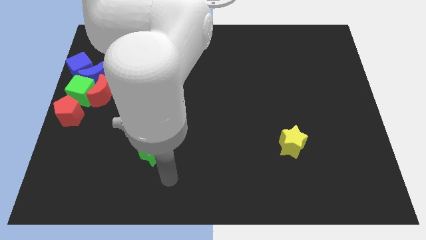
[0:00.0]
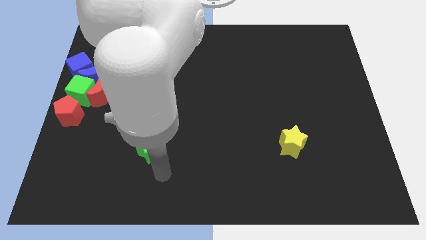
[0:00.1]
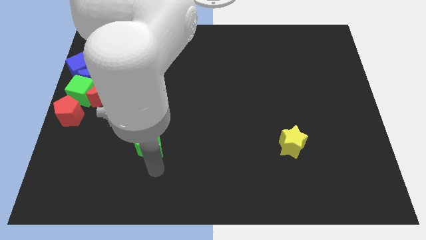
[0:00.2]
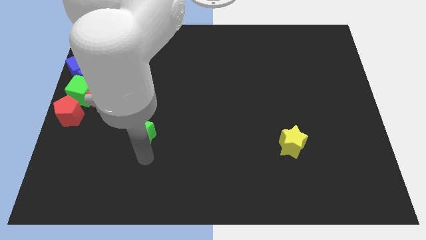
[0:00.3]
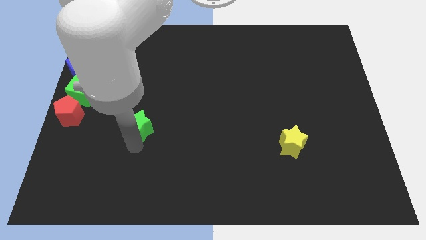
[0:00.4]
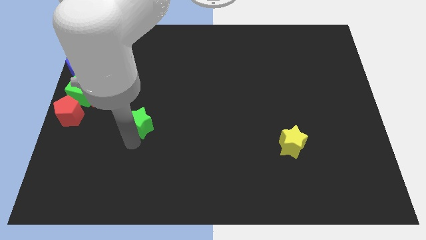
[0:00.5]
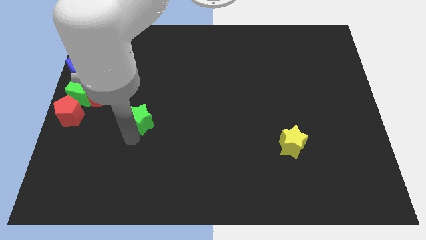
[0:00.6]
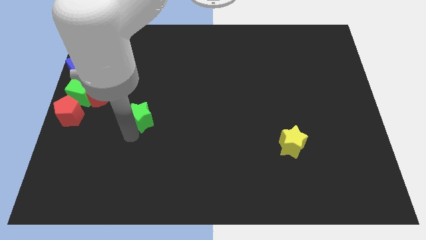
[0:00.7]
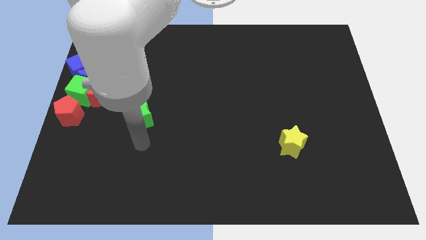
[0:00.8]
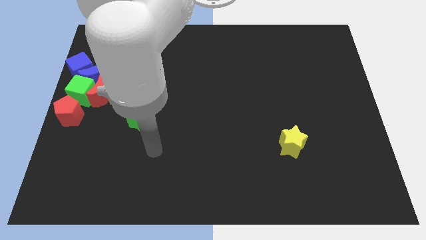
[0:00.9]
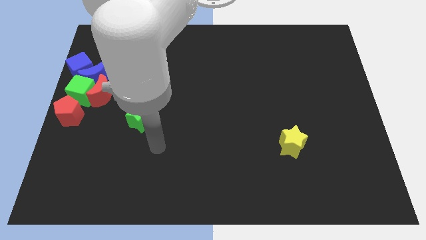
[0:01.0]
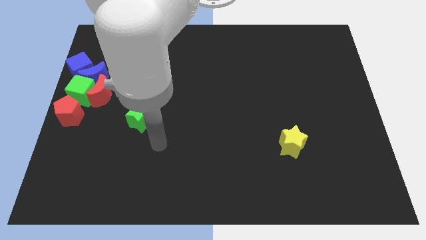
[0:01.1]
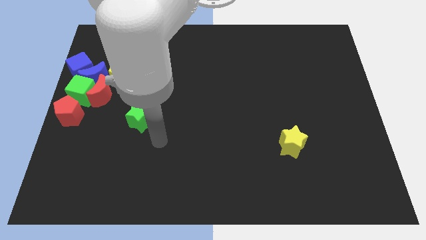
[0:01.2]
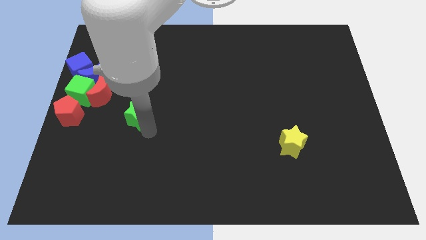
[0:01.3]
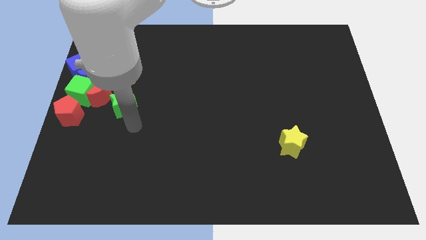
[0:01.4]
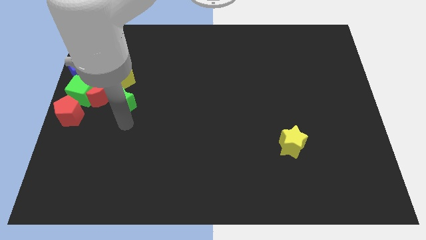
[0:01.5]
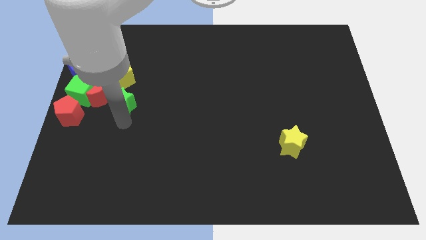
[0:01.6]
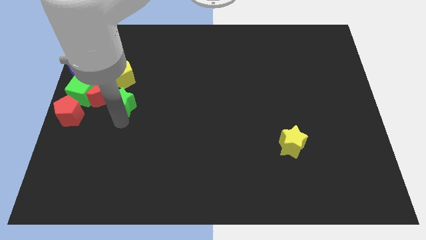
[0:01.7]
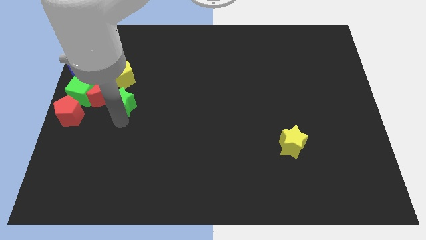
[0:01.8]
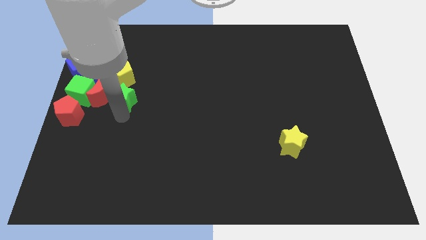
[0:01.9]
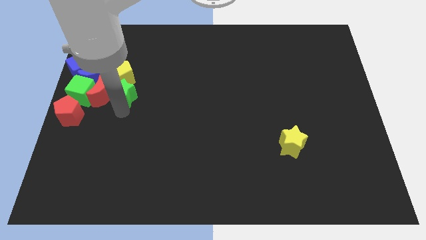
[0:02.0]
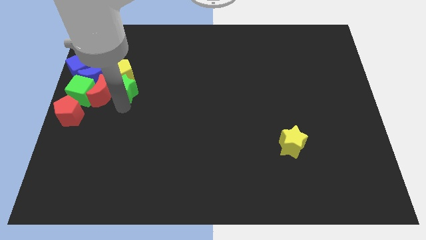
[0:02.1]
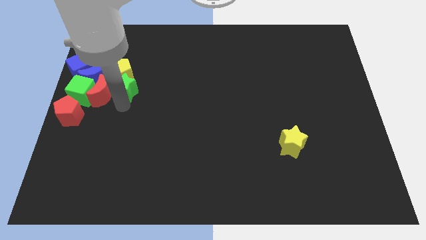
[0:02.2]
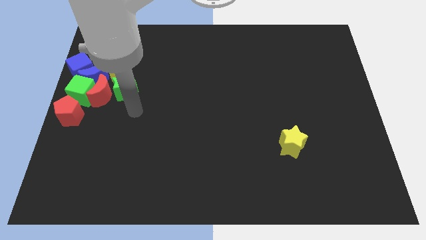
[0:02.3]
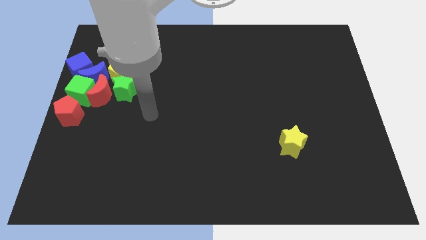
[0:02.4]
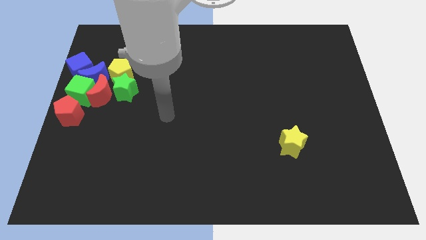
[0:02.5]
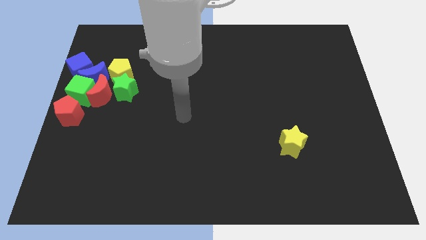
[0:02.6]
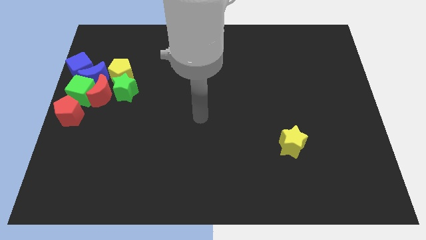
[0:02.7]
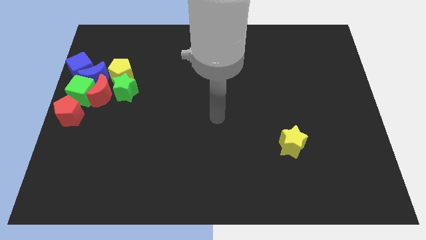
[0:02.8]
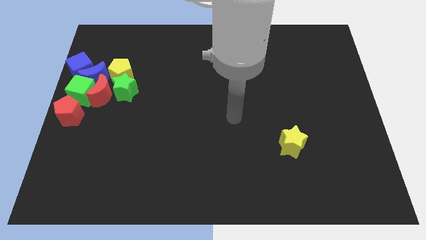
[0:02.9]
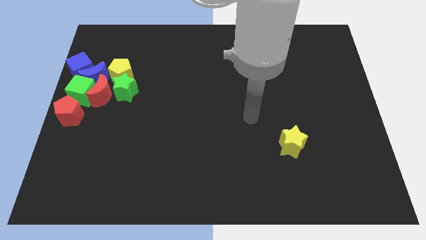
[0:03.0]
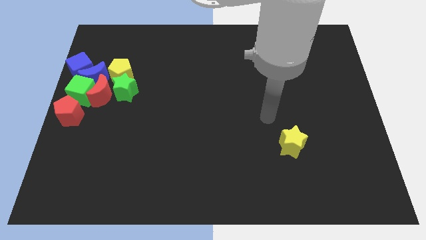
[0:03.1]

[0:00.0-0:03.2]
slide the green star into the yellow pentagon

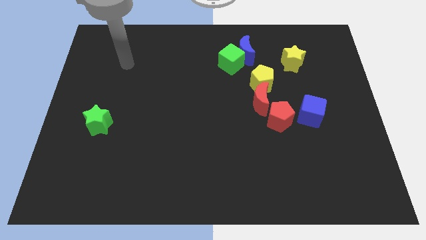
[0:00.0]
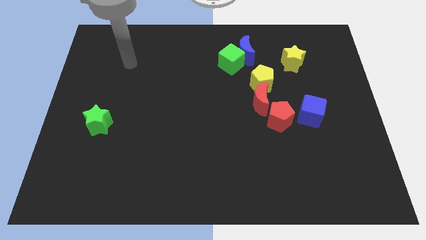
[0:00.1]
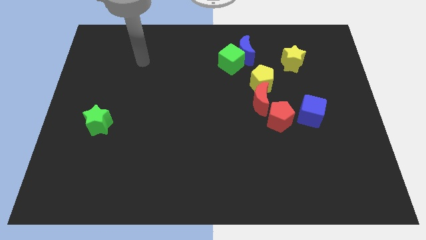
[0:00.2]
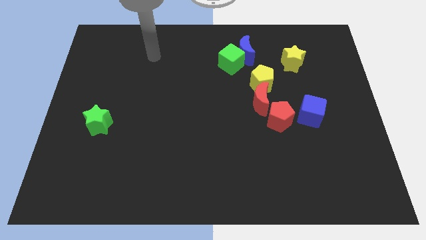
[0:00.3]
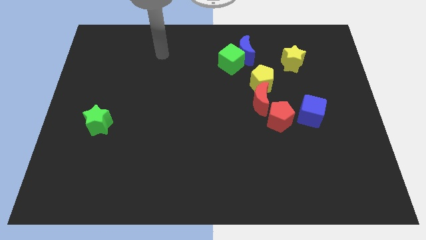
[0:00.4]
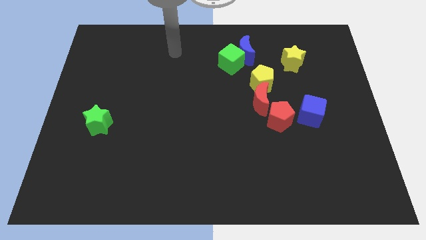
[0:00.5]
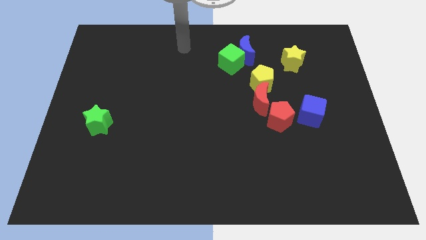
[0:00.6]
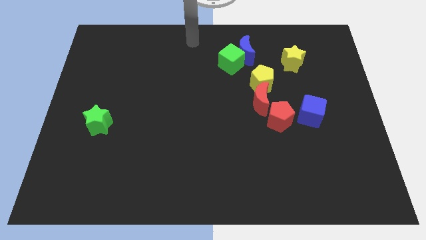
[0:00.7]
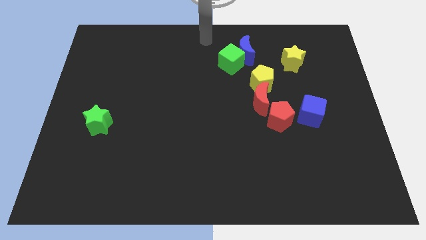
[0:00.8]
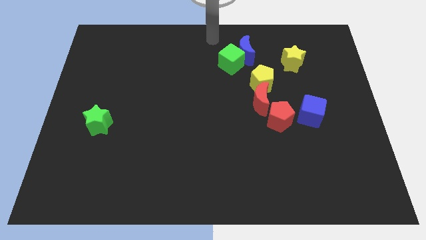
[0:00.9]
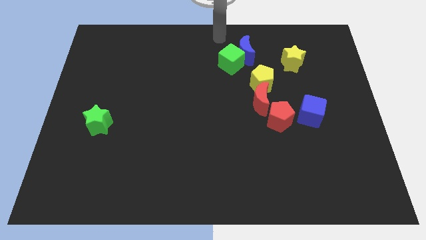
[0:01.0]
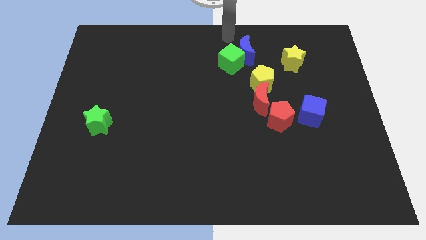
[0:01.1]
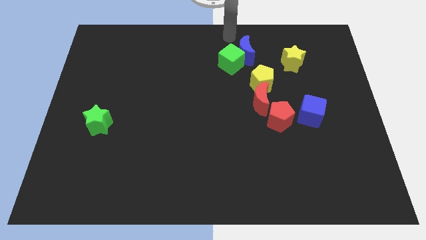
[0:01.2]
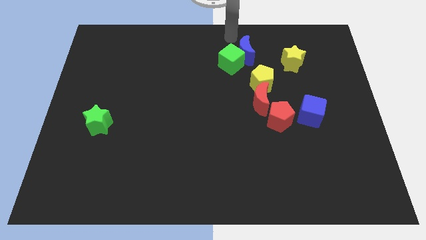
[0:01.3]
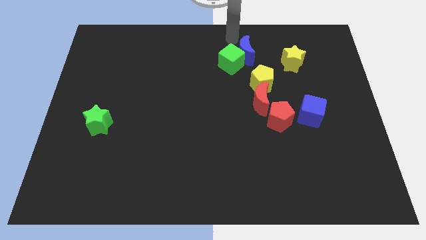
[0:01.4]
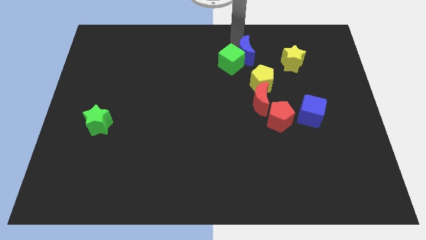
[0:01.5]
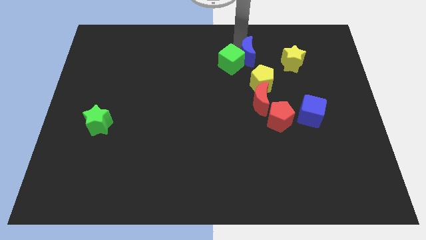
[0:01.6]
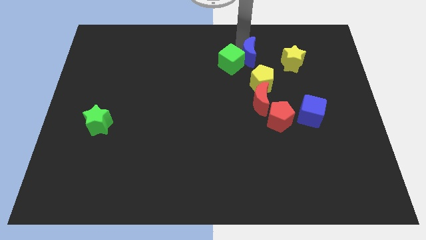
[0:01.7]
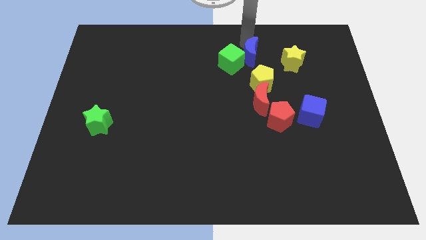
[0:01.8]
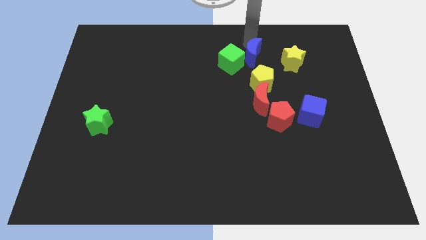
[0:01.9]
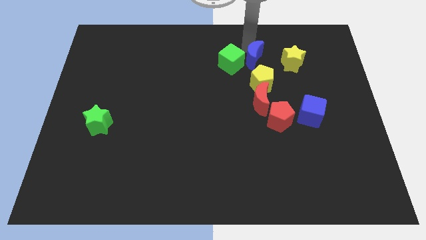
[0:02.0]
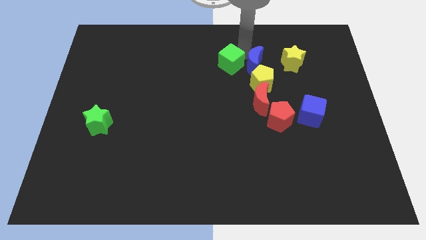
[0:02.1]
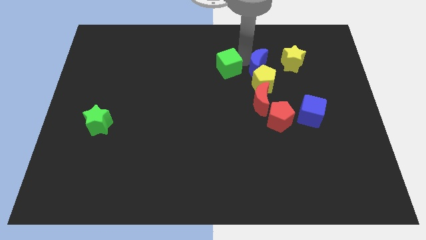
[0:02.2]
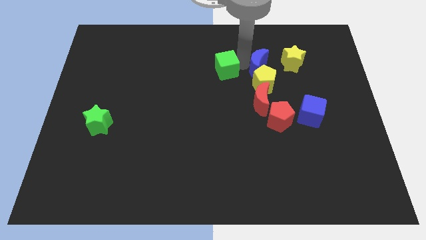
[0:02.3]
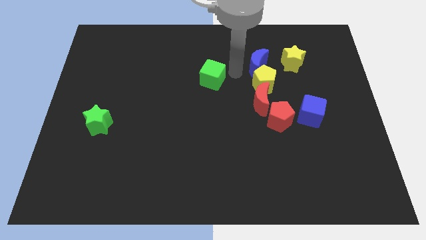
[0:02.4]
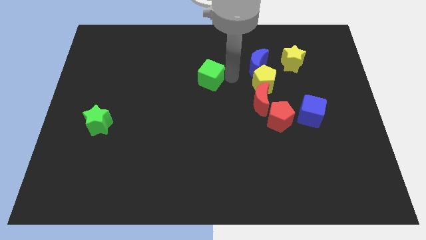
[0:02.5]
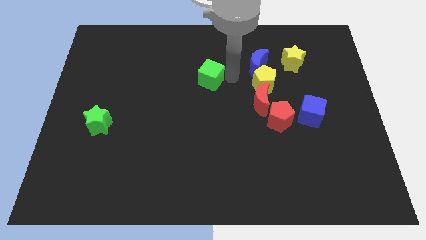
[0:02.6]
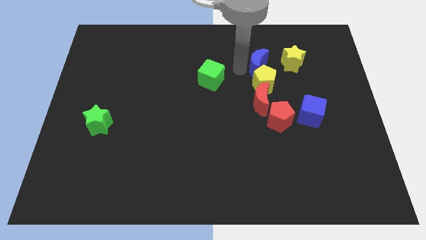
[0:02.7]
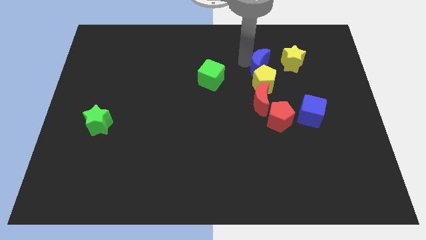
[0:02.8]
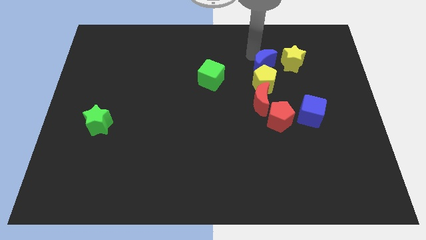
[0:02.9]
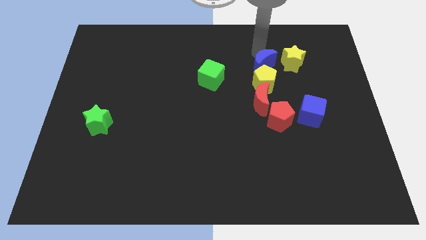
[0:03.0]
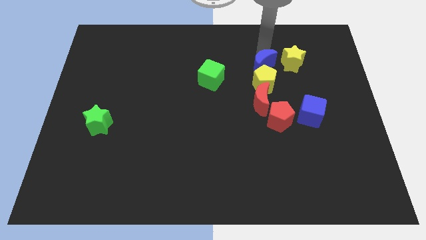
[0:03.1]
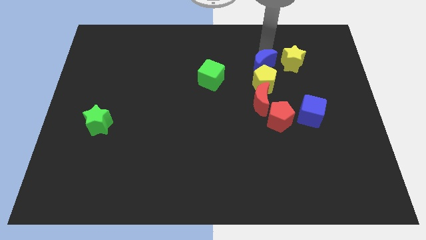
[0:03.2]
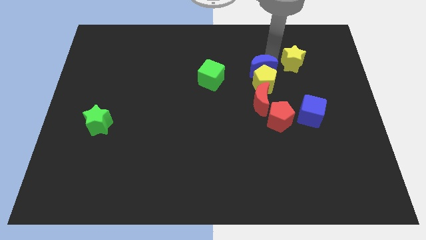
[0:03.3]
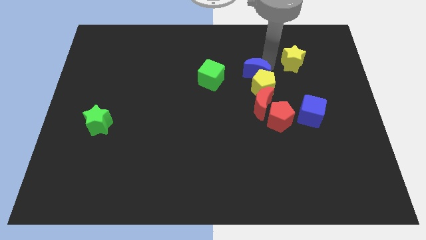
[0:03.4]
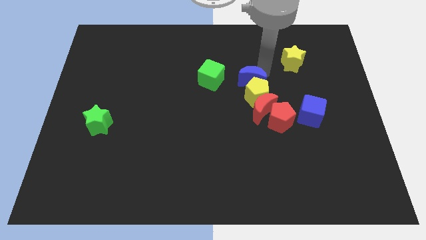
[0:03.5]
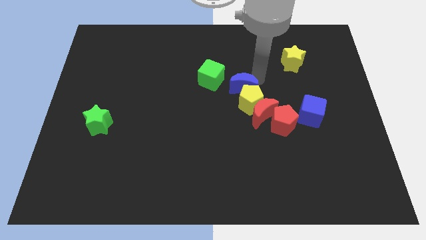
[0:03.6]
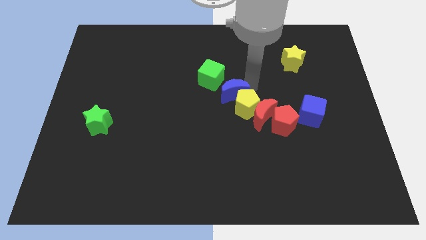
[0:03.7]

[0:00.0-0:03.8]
push the blue crescent and the green cube slightly to the bottom

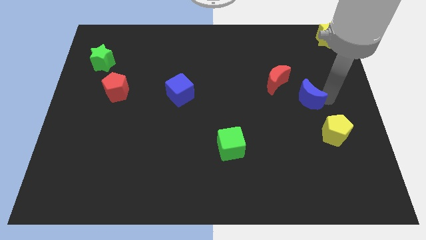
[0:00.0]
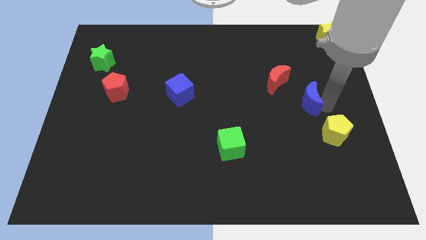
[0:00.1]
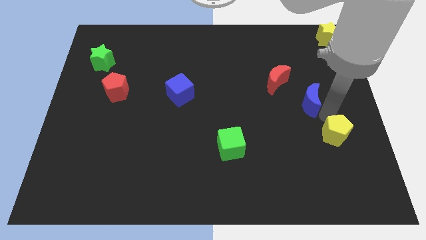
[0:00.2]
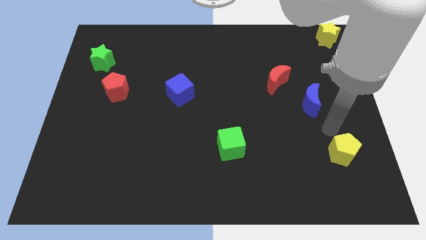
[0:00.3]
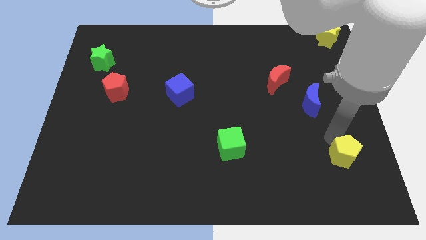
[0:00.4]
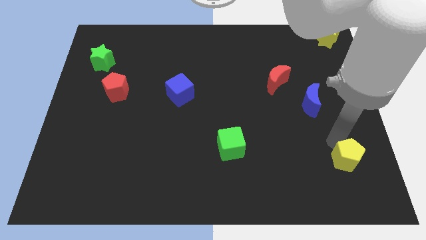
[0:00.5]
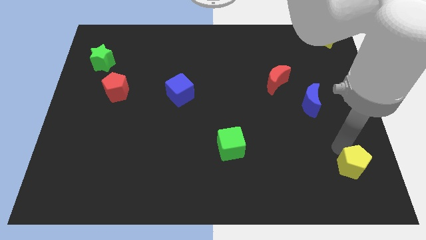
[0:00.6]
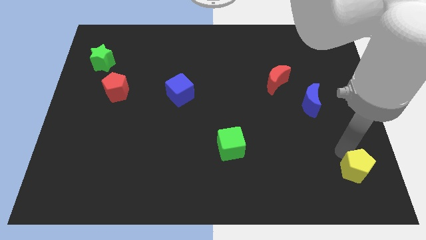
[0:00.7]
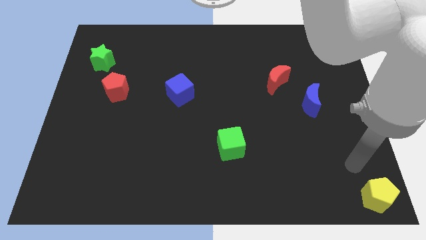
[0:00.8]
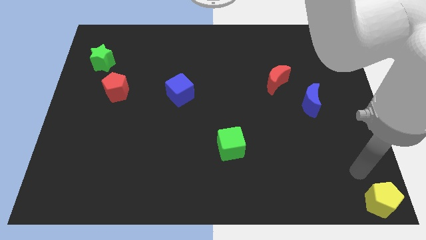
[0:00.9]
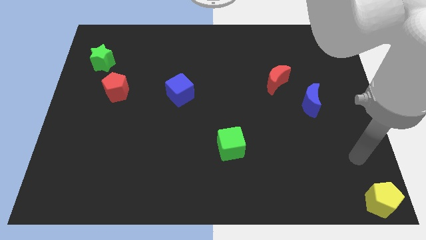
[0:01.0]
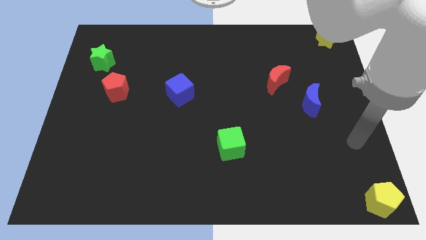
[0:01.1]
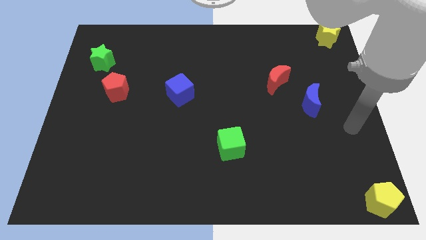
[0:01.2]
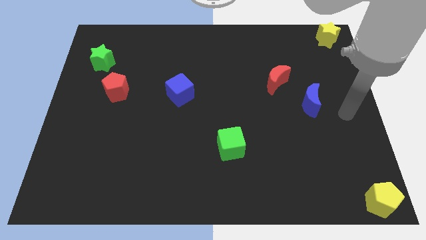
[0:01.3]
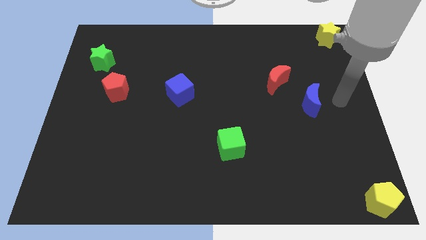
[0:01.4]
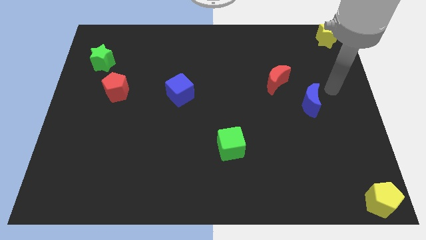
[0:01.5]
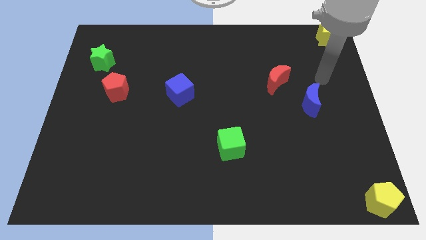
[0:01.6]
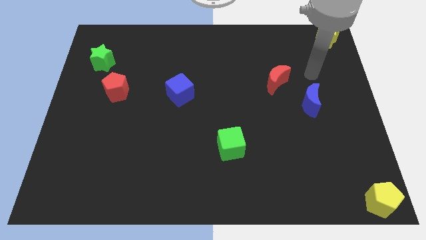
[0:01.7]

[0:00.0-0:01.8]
move the pentagon to the bottom right corner
